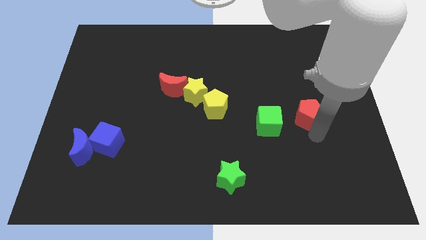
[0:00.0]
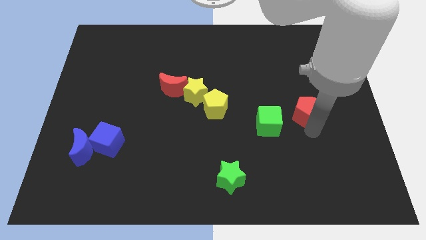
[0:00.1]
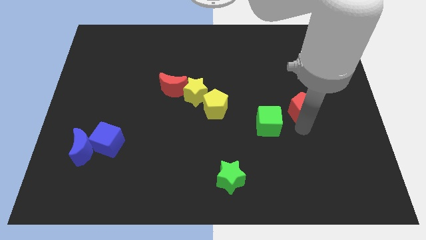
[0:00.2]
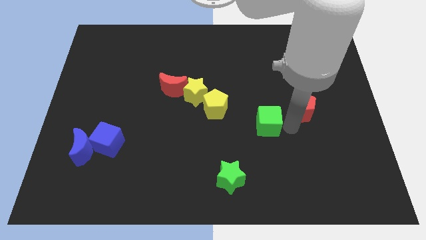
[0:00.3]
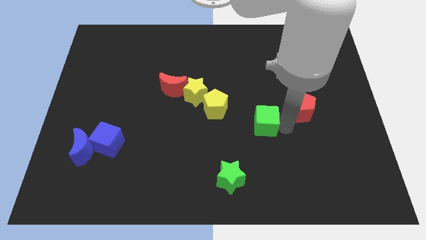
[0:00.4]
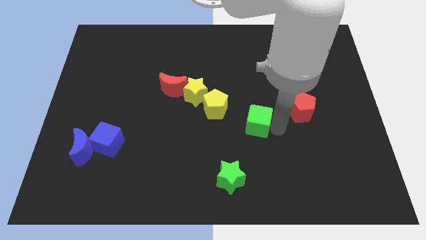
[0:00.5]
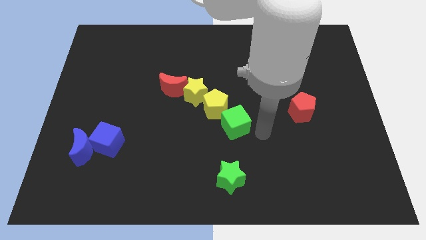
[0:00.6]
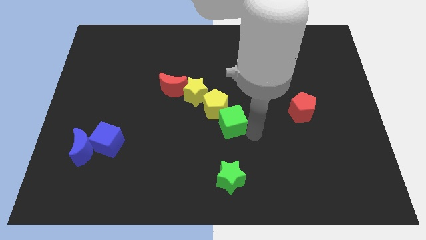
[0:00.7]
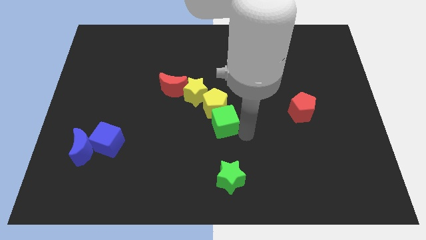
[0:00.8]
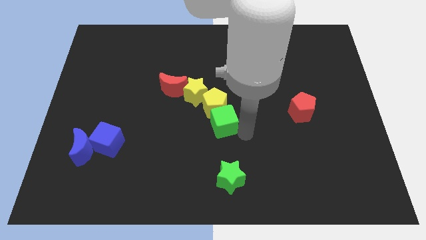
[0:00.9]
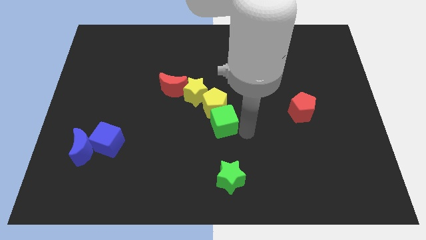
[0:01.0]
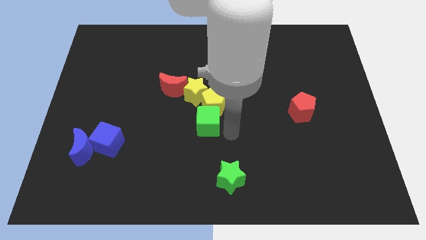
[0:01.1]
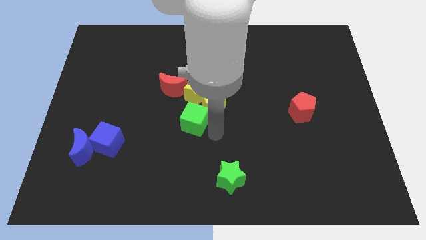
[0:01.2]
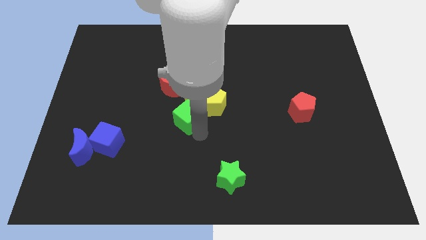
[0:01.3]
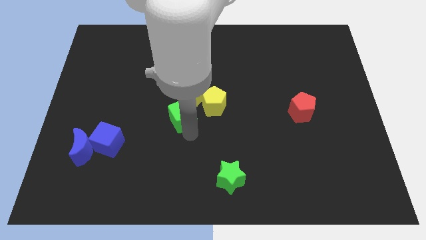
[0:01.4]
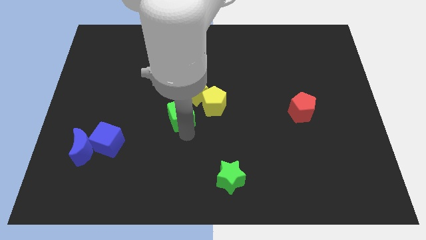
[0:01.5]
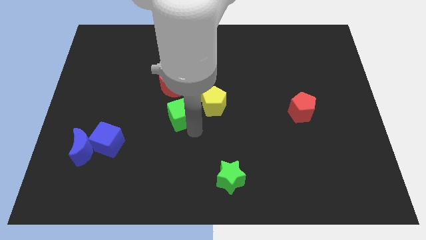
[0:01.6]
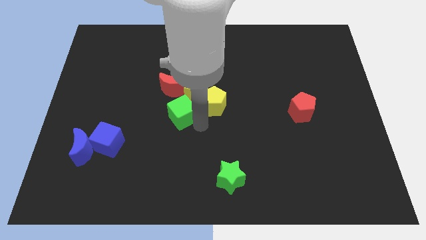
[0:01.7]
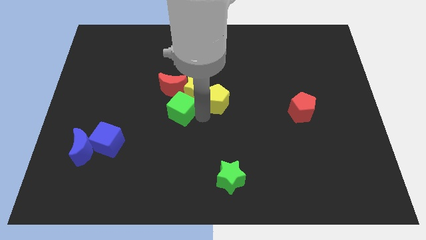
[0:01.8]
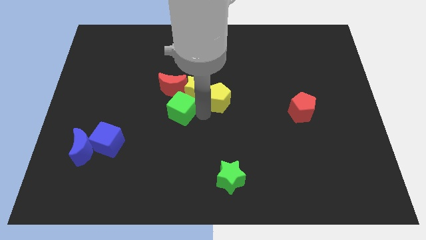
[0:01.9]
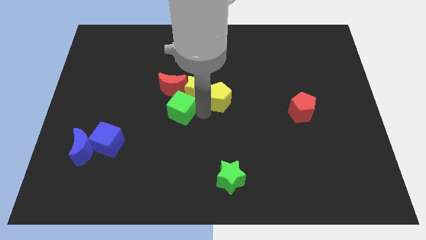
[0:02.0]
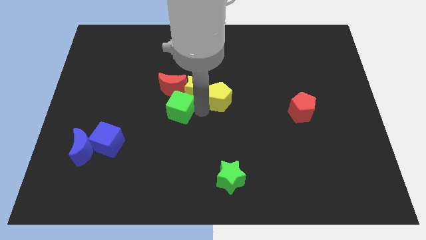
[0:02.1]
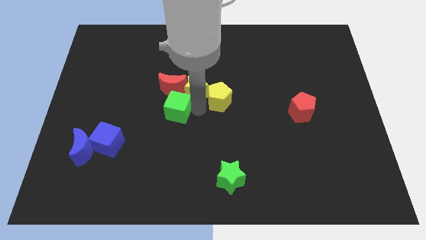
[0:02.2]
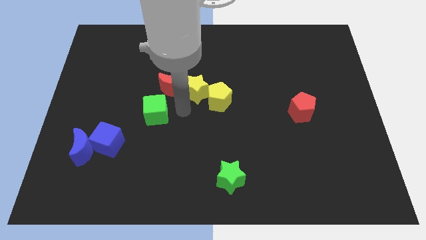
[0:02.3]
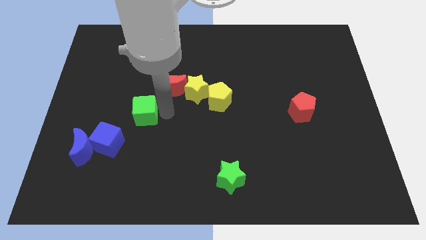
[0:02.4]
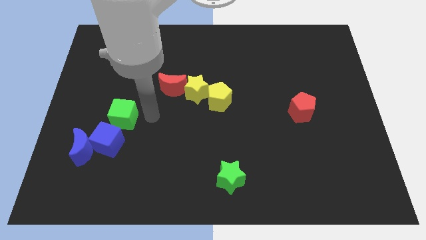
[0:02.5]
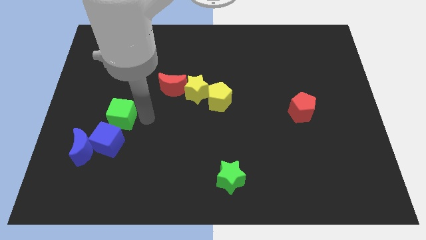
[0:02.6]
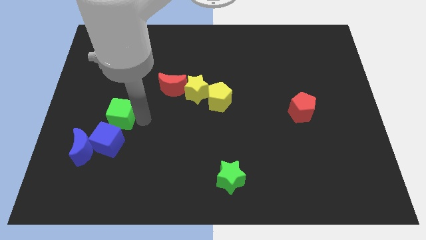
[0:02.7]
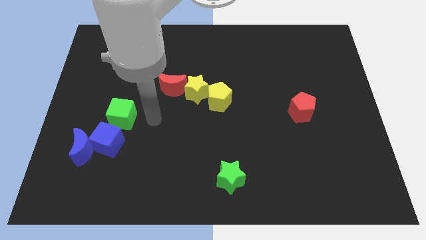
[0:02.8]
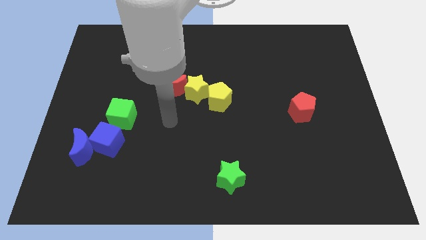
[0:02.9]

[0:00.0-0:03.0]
move the green cube close to the blue cube

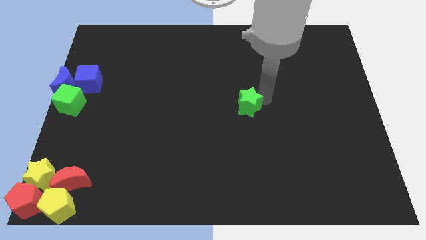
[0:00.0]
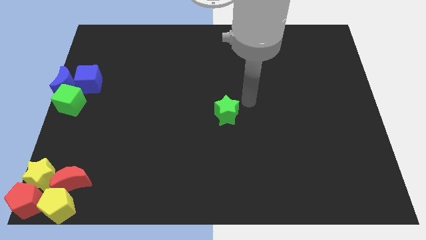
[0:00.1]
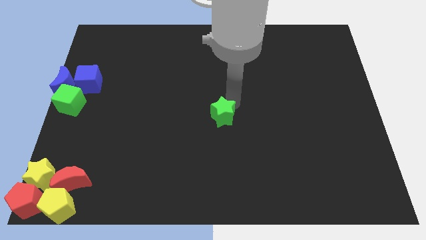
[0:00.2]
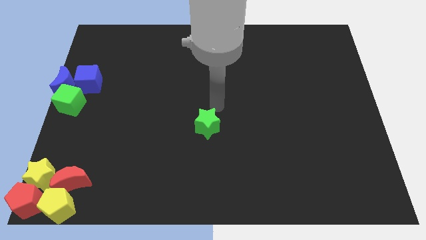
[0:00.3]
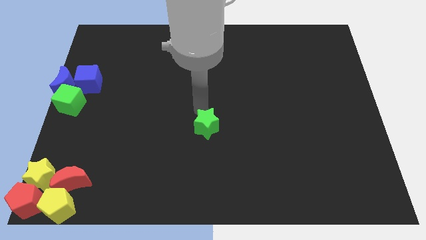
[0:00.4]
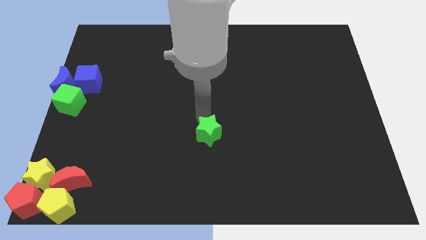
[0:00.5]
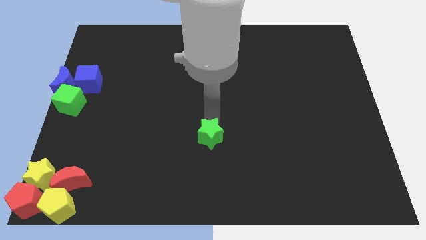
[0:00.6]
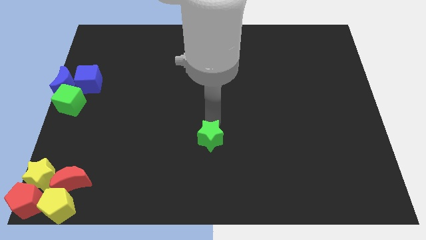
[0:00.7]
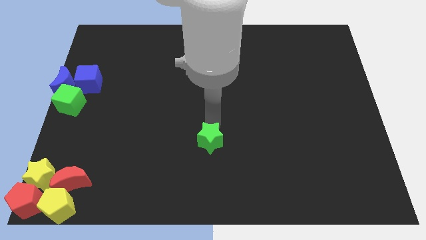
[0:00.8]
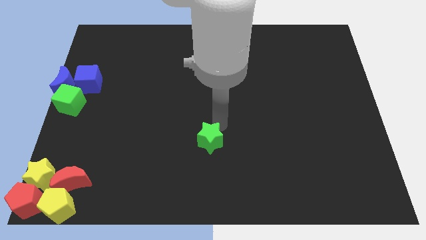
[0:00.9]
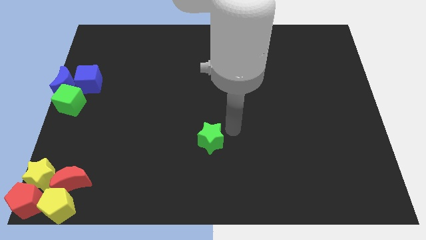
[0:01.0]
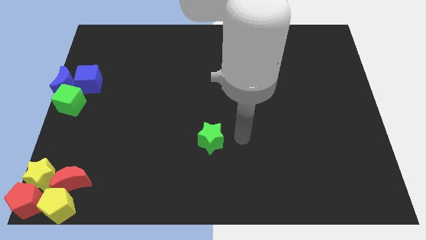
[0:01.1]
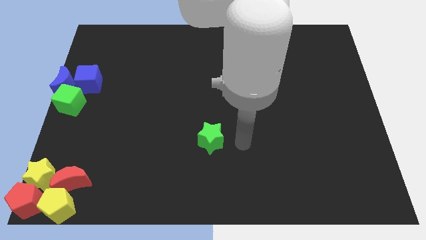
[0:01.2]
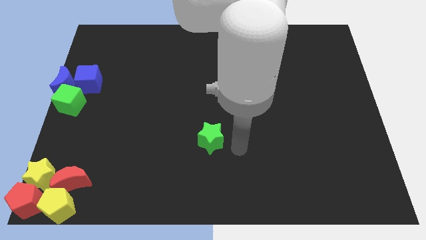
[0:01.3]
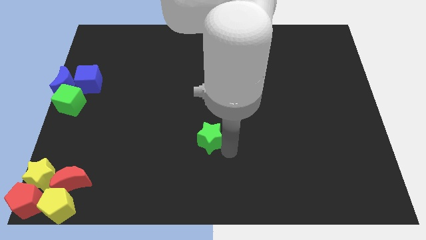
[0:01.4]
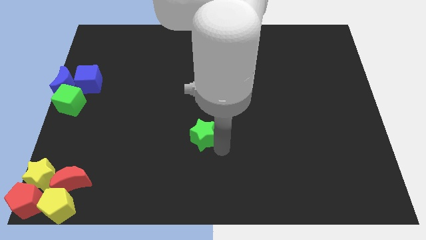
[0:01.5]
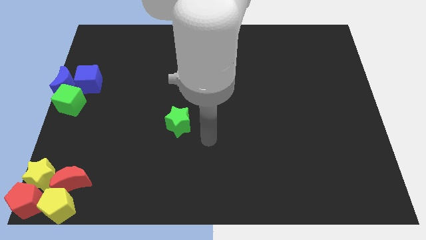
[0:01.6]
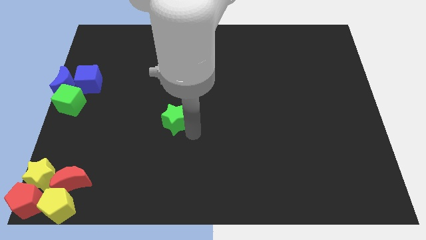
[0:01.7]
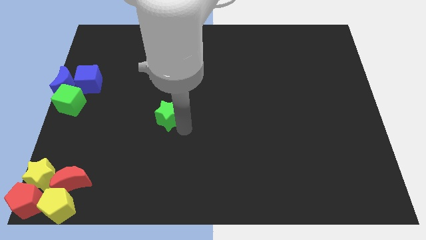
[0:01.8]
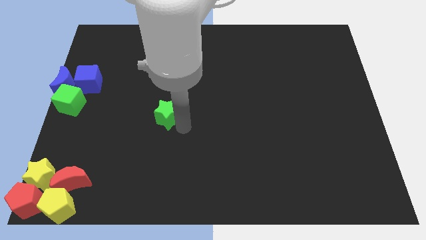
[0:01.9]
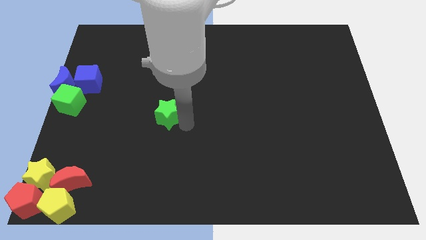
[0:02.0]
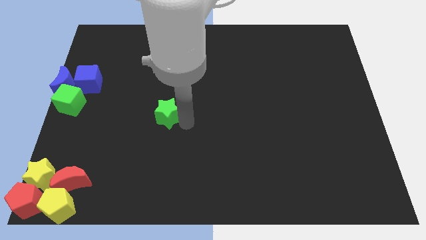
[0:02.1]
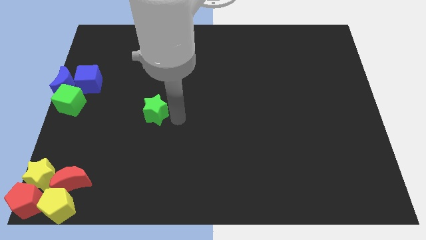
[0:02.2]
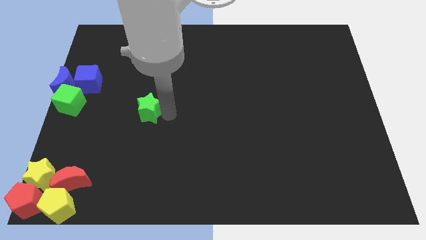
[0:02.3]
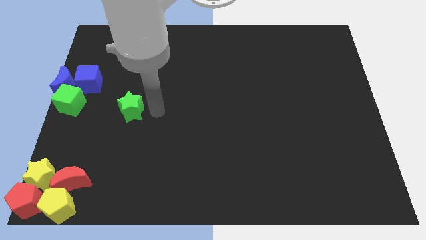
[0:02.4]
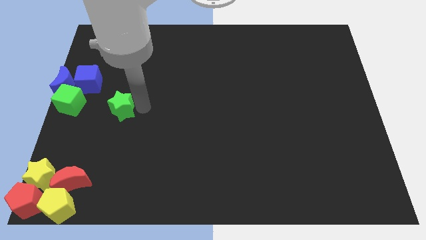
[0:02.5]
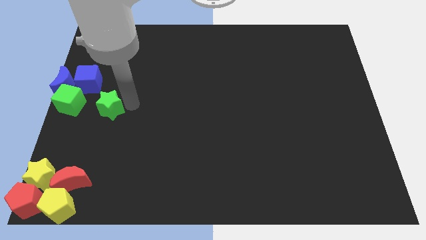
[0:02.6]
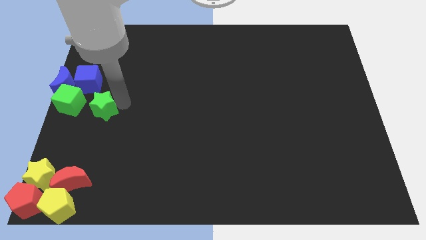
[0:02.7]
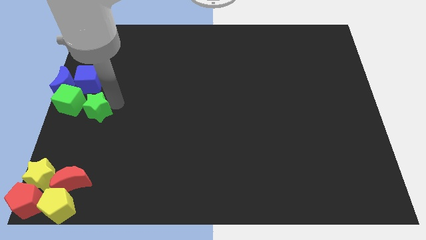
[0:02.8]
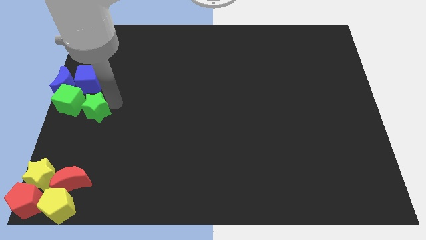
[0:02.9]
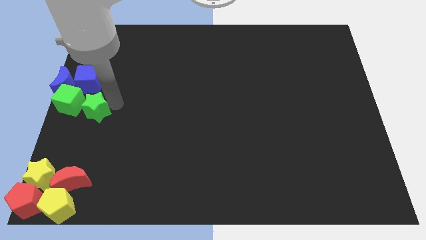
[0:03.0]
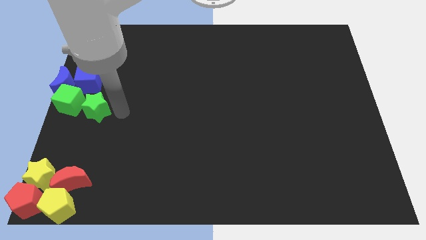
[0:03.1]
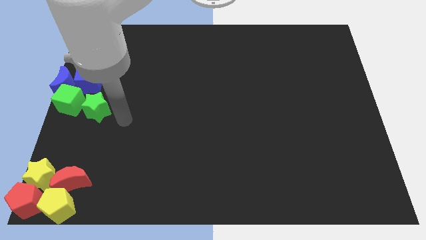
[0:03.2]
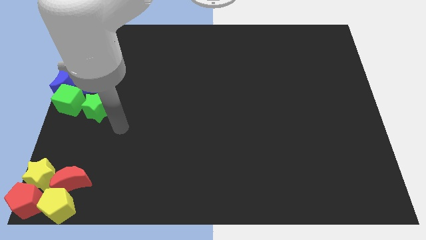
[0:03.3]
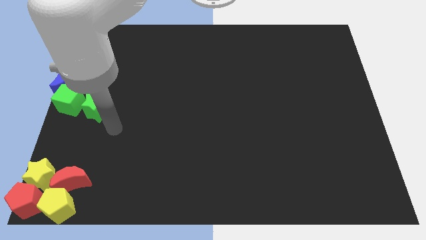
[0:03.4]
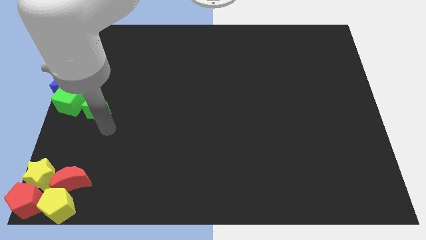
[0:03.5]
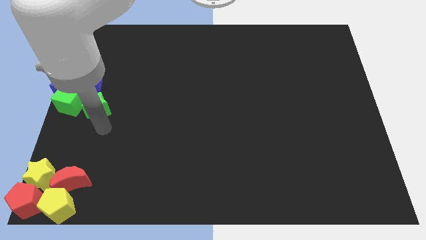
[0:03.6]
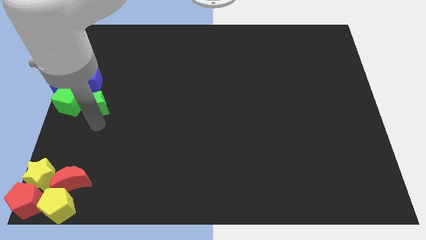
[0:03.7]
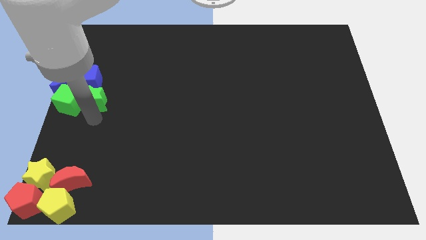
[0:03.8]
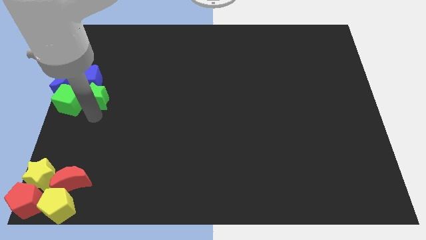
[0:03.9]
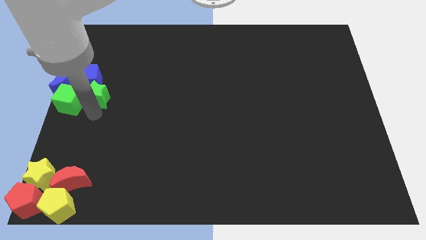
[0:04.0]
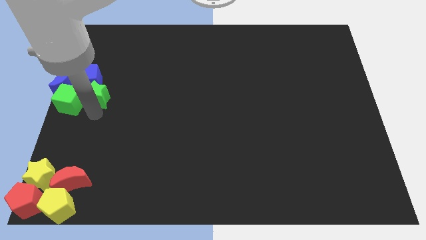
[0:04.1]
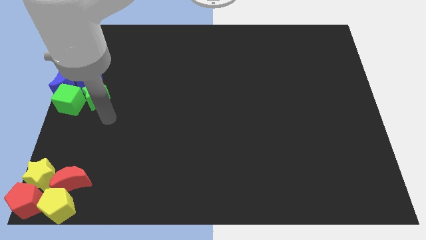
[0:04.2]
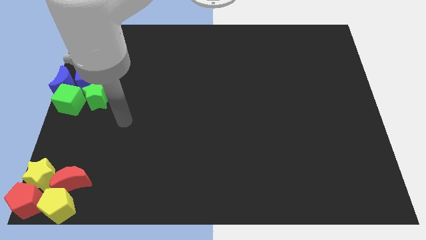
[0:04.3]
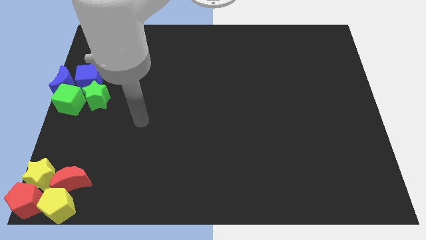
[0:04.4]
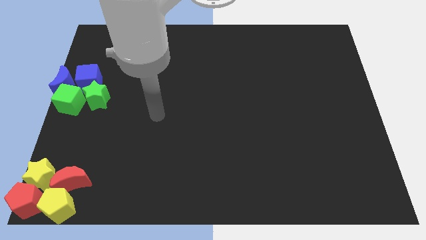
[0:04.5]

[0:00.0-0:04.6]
move the green star to the right side of the green cube

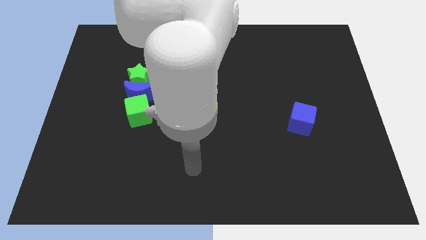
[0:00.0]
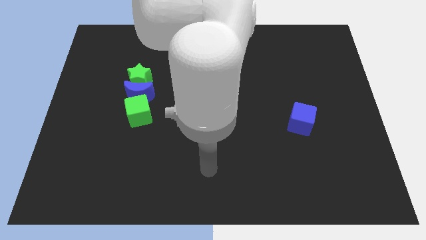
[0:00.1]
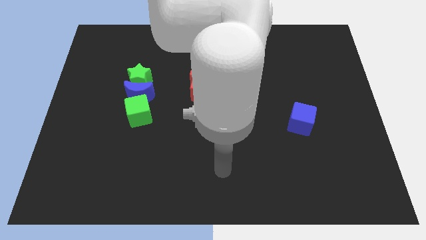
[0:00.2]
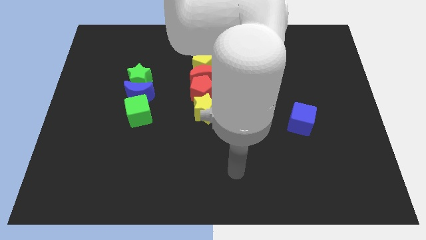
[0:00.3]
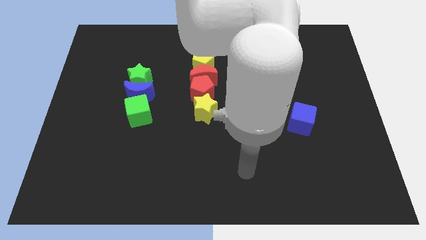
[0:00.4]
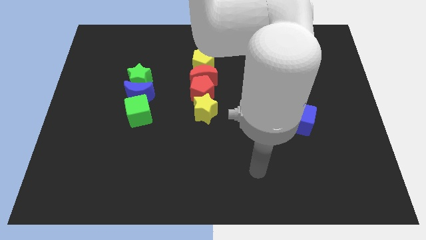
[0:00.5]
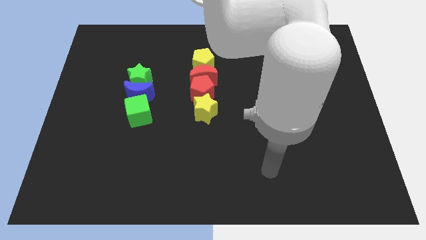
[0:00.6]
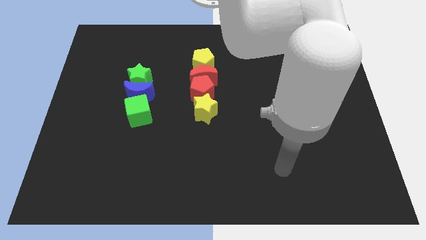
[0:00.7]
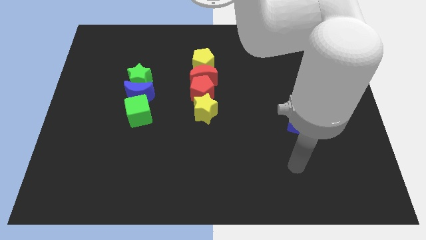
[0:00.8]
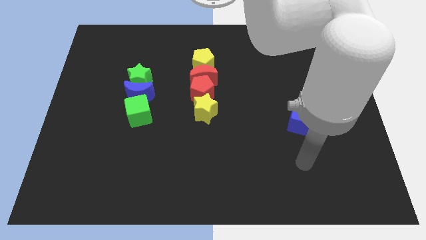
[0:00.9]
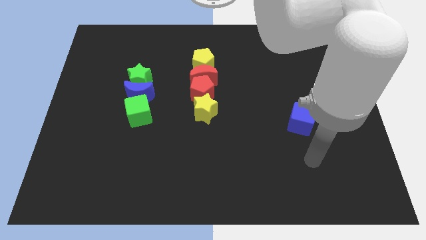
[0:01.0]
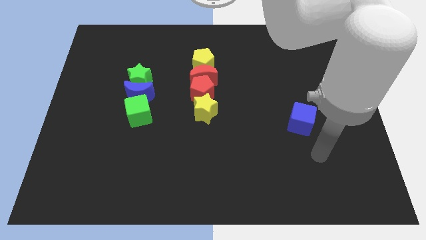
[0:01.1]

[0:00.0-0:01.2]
place the arm close to the blue cube

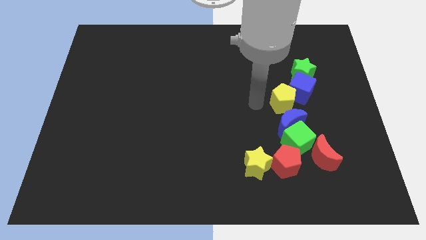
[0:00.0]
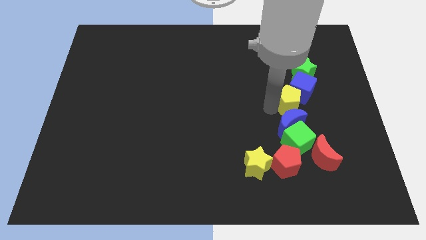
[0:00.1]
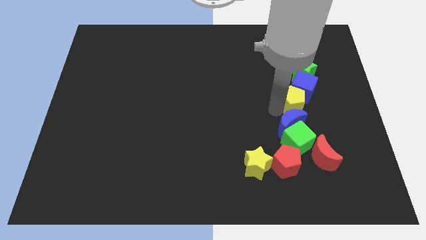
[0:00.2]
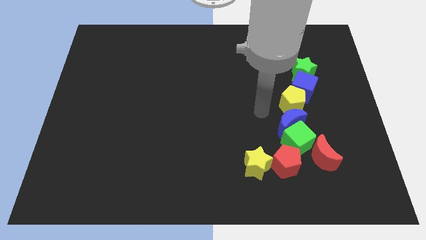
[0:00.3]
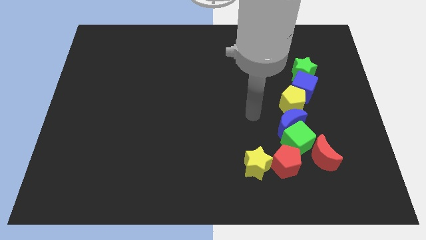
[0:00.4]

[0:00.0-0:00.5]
slightly push the yellow pentagon towards right
